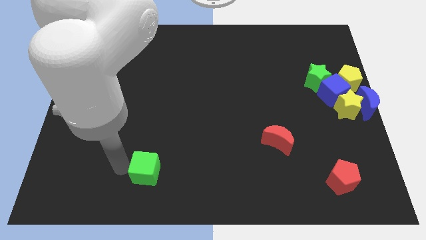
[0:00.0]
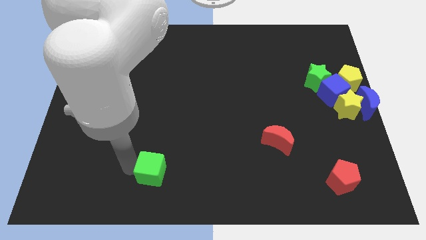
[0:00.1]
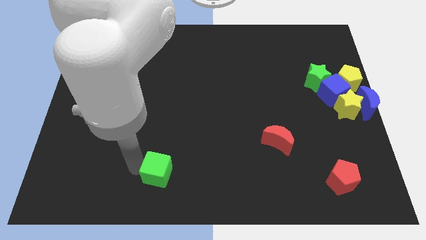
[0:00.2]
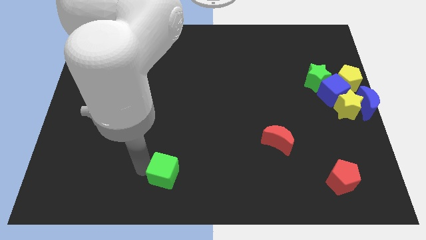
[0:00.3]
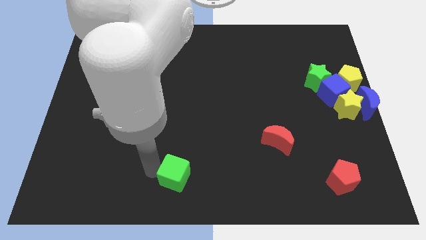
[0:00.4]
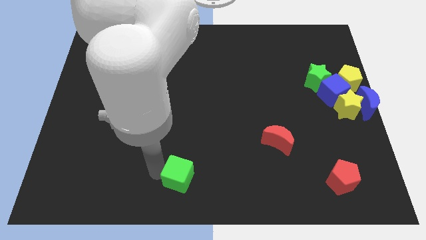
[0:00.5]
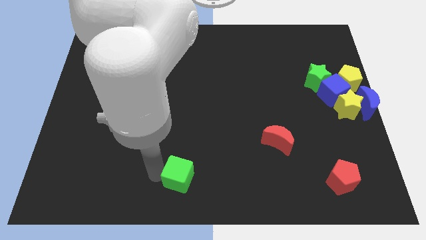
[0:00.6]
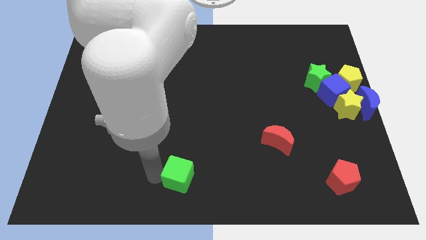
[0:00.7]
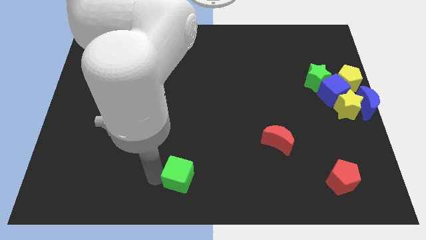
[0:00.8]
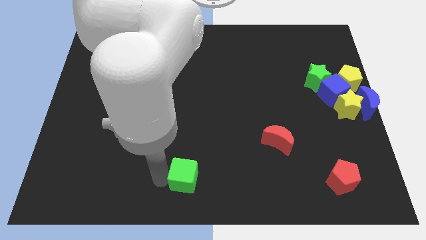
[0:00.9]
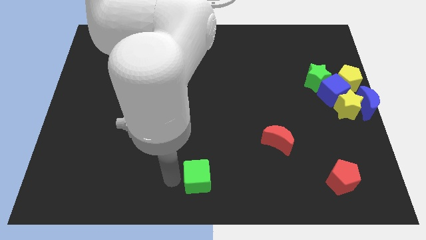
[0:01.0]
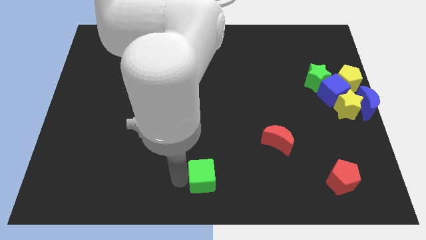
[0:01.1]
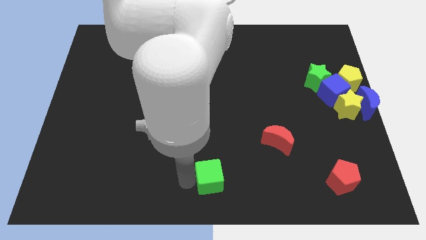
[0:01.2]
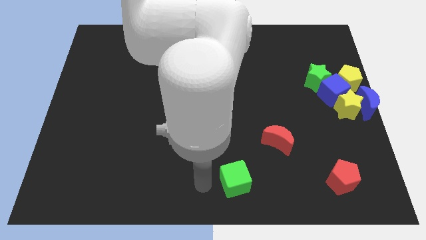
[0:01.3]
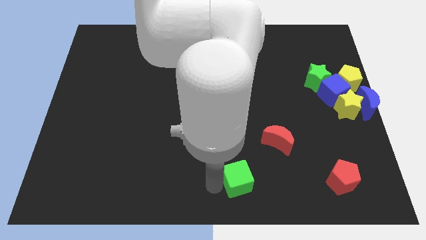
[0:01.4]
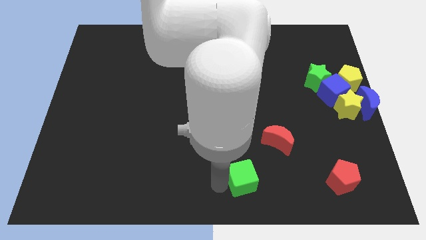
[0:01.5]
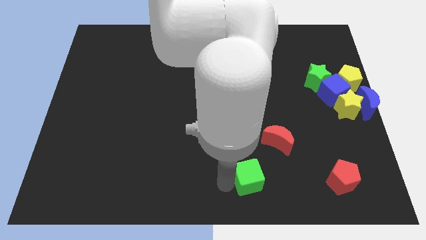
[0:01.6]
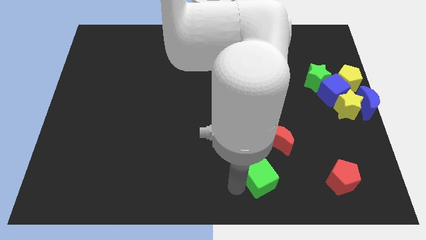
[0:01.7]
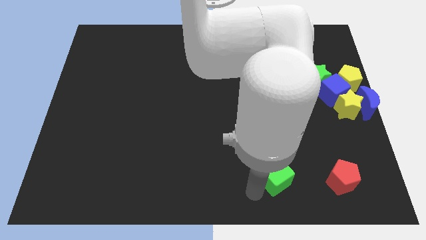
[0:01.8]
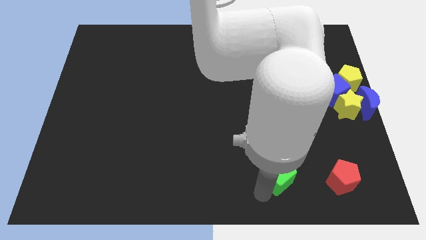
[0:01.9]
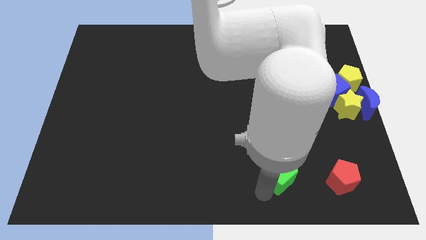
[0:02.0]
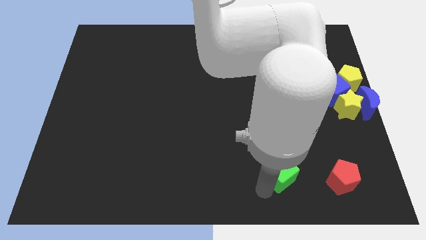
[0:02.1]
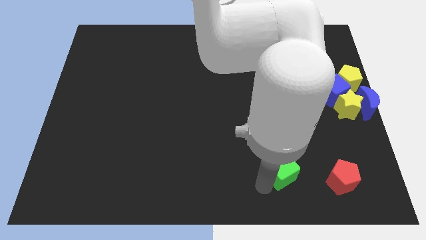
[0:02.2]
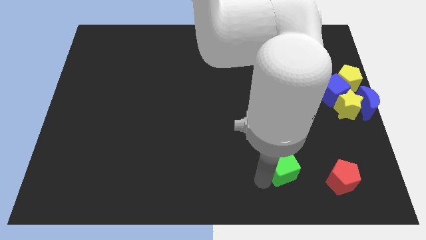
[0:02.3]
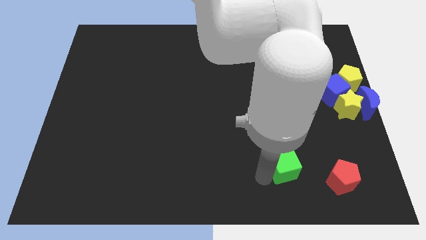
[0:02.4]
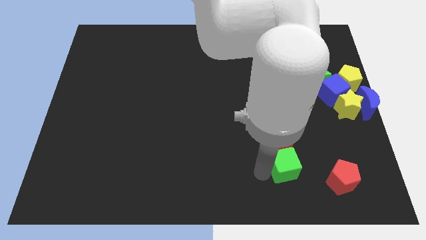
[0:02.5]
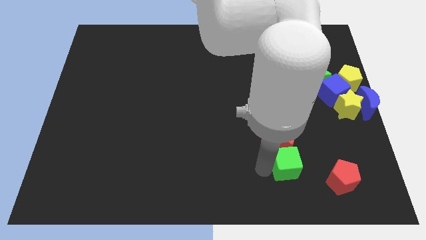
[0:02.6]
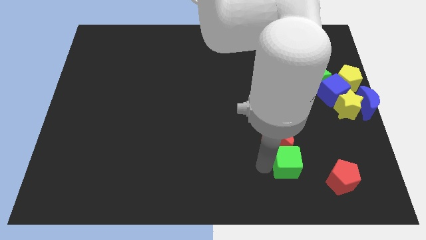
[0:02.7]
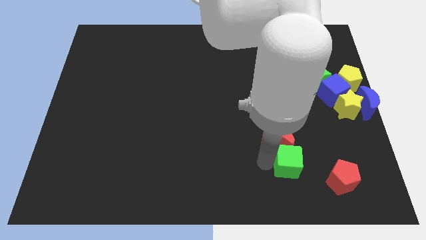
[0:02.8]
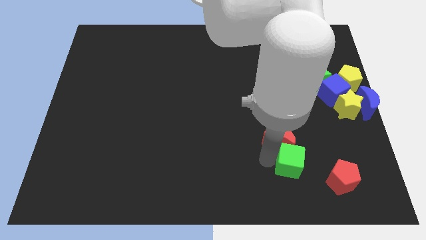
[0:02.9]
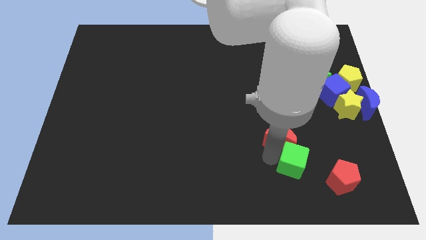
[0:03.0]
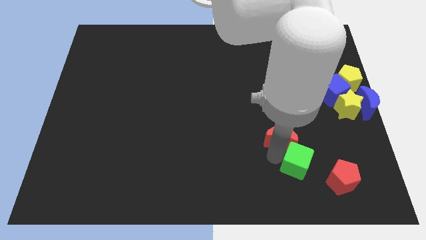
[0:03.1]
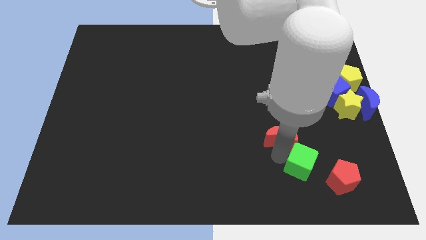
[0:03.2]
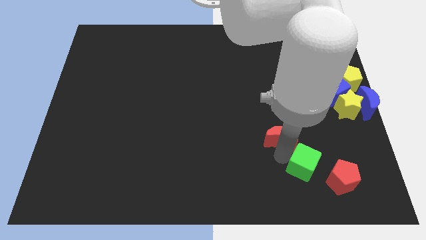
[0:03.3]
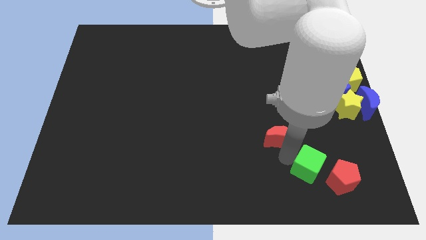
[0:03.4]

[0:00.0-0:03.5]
place the green cube in between the red crescent and red pentagon

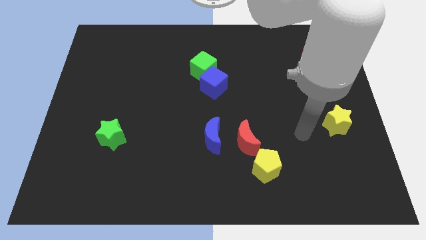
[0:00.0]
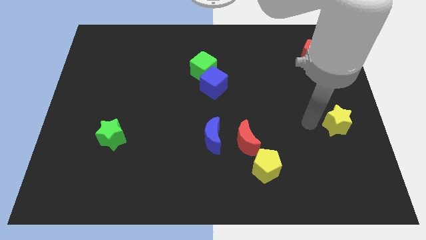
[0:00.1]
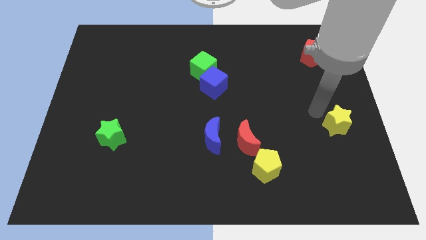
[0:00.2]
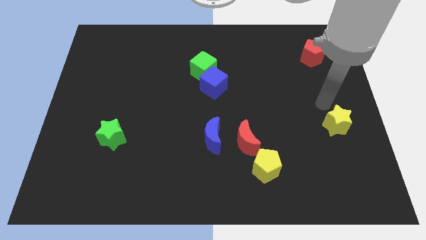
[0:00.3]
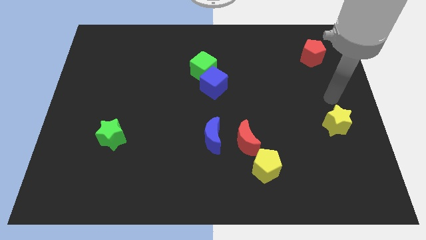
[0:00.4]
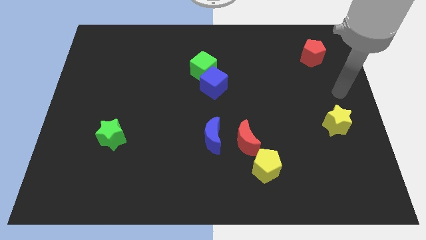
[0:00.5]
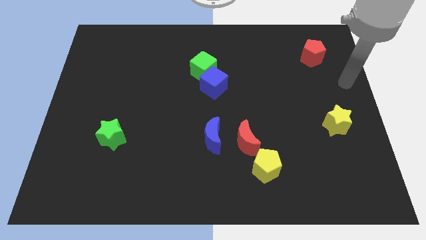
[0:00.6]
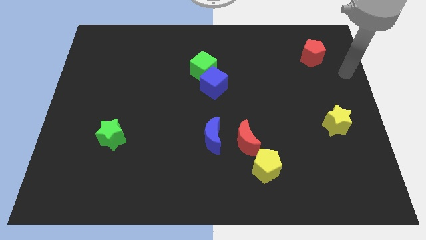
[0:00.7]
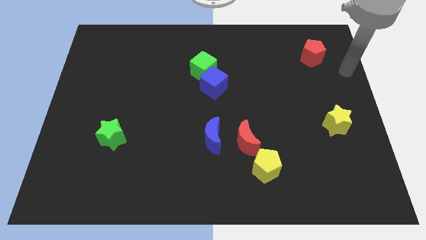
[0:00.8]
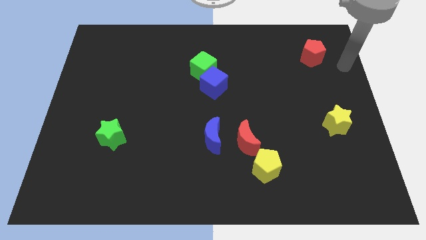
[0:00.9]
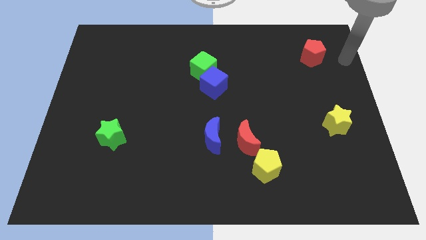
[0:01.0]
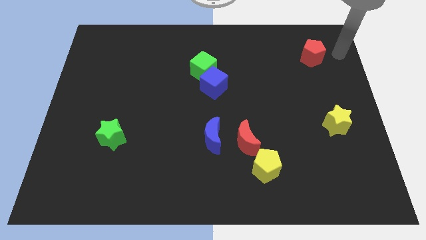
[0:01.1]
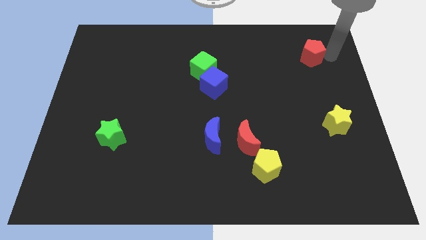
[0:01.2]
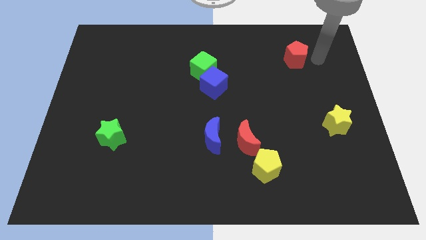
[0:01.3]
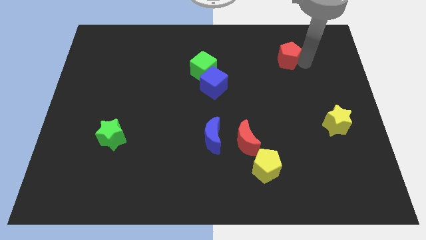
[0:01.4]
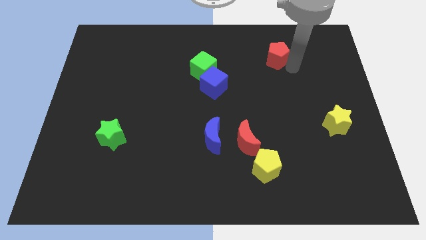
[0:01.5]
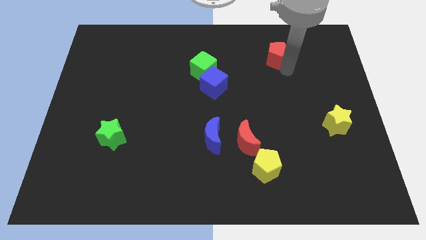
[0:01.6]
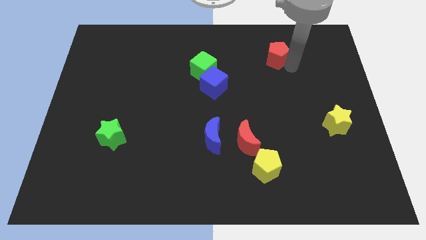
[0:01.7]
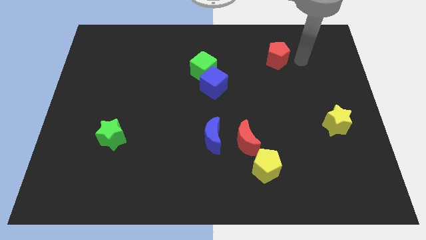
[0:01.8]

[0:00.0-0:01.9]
move the red pentagon the left side of the table

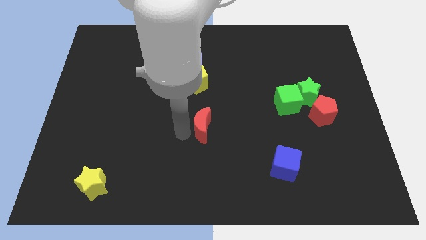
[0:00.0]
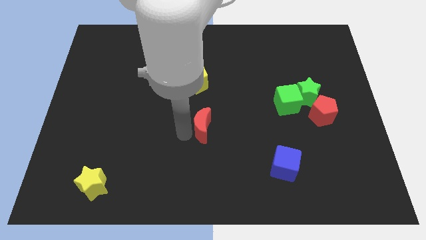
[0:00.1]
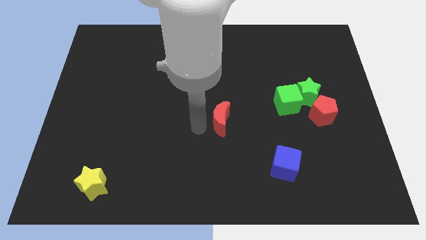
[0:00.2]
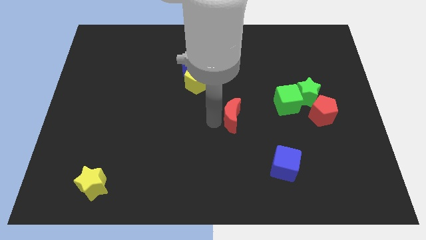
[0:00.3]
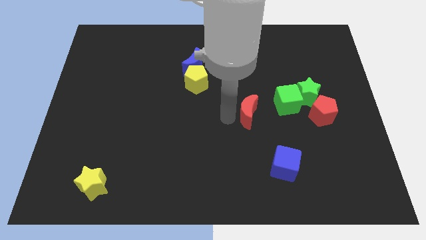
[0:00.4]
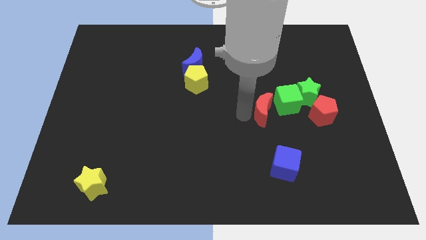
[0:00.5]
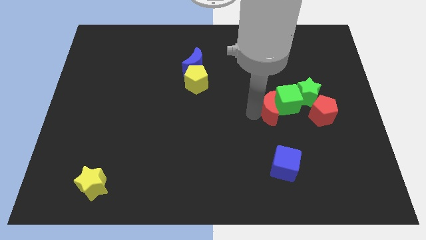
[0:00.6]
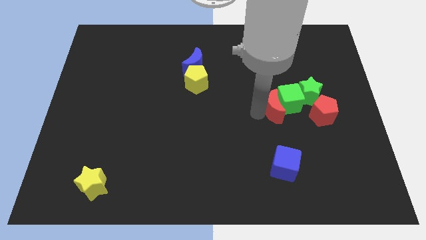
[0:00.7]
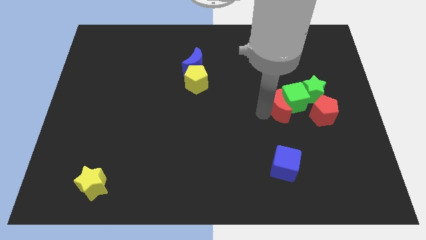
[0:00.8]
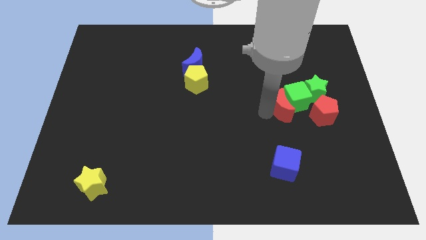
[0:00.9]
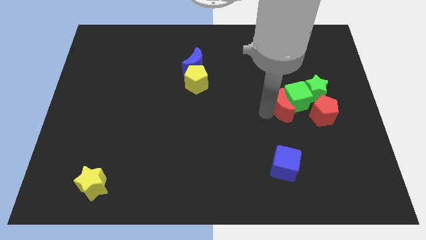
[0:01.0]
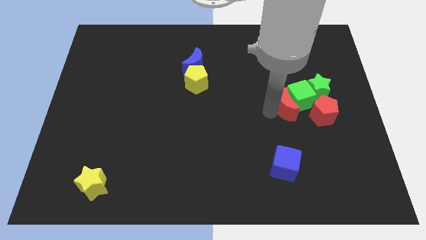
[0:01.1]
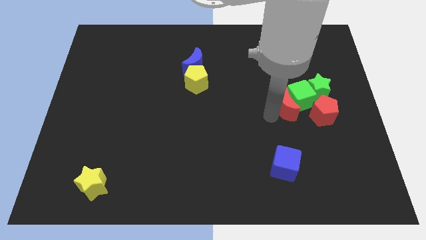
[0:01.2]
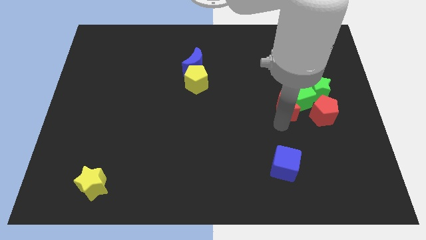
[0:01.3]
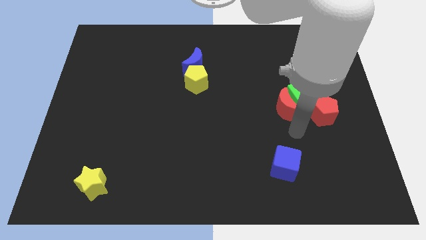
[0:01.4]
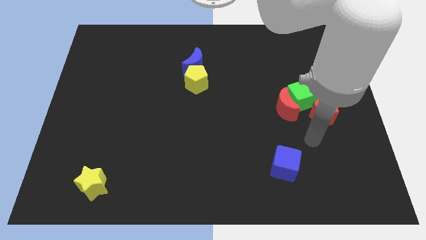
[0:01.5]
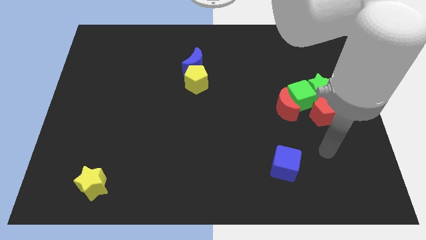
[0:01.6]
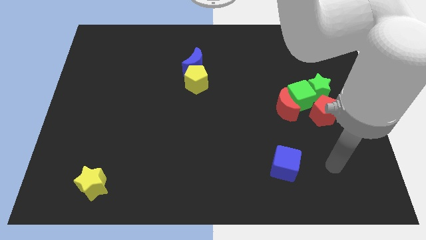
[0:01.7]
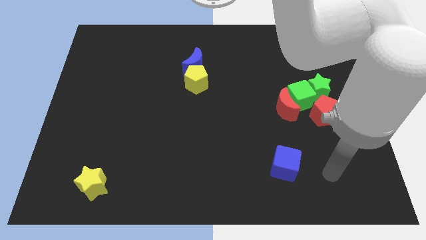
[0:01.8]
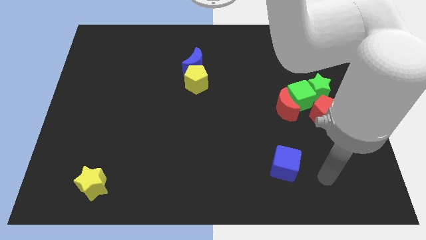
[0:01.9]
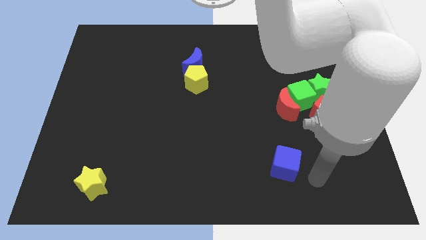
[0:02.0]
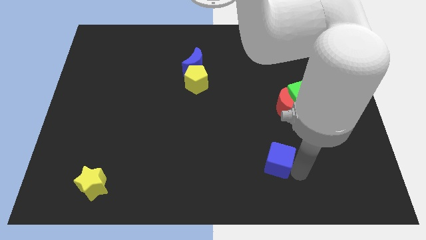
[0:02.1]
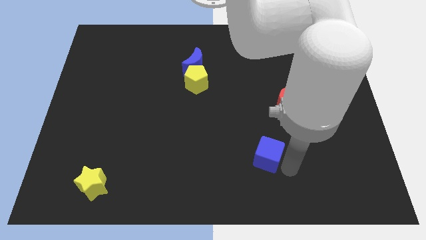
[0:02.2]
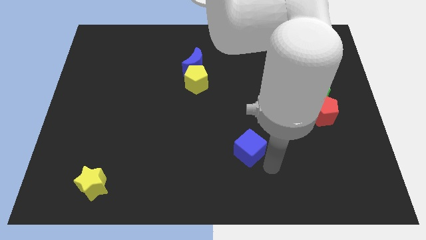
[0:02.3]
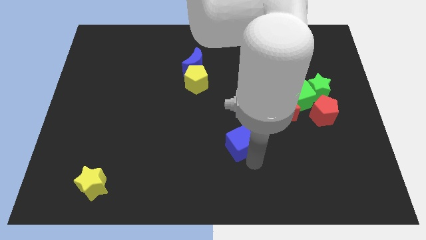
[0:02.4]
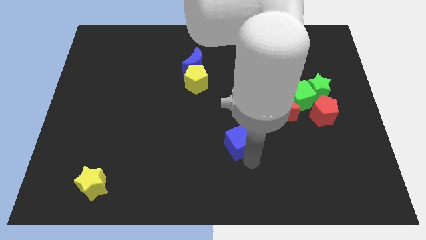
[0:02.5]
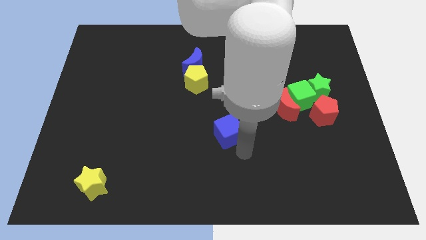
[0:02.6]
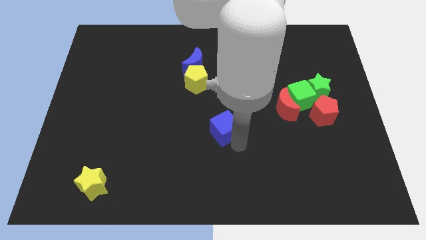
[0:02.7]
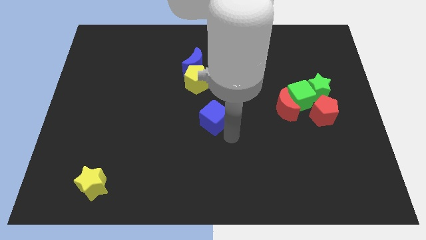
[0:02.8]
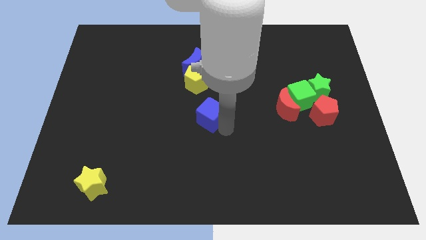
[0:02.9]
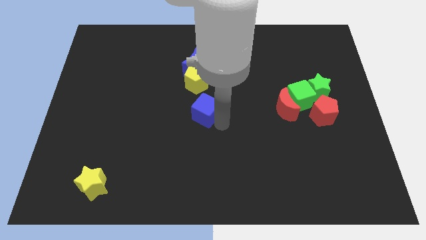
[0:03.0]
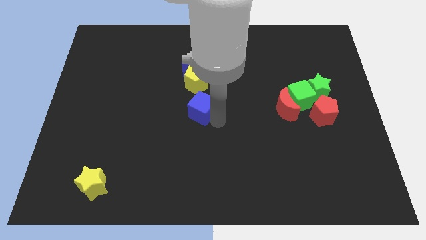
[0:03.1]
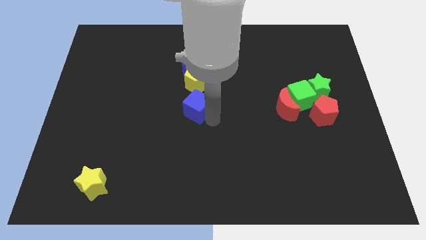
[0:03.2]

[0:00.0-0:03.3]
move the blue cube under the yellow pentagon

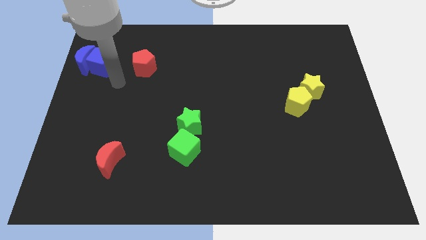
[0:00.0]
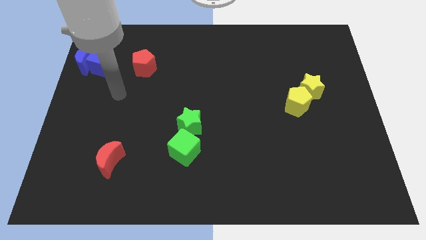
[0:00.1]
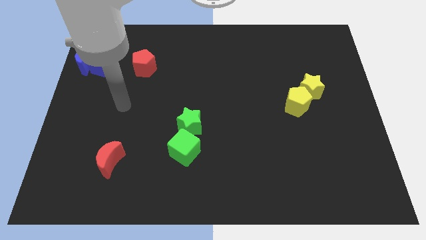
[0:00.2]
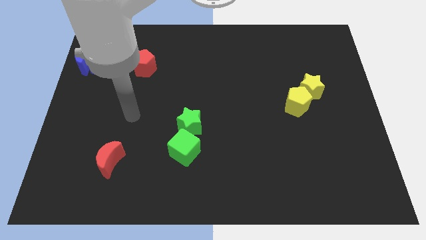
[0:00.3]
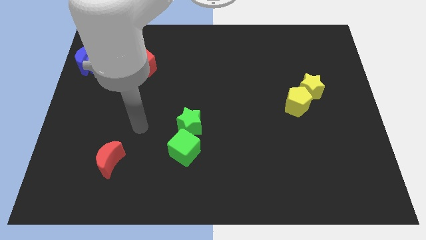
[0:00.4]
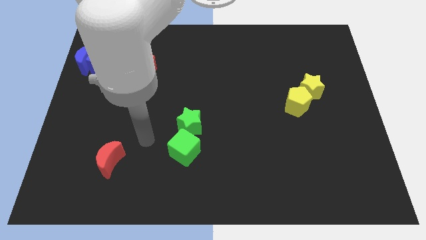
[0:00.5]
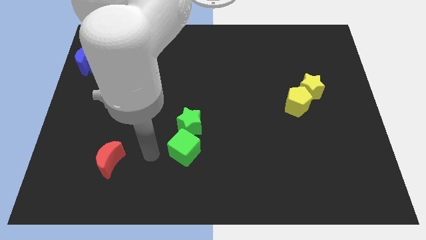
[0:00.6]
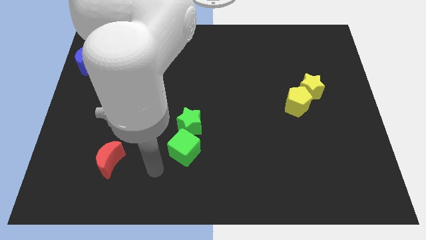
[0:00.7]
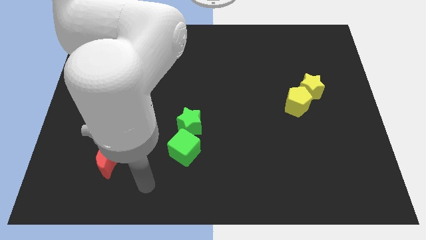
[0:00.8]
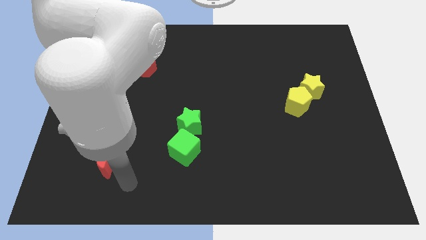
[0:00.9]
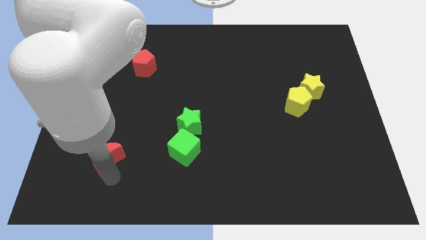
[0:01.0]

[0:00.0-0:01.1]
move your arm towards the bottom of the red crescent
